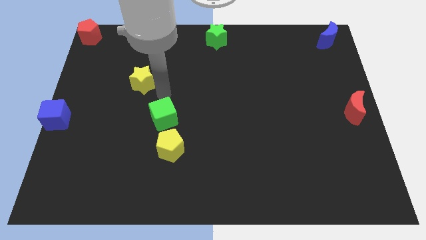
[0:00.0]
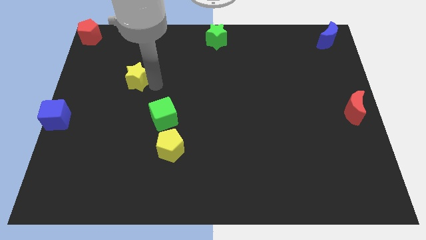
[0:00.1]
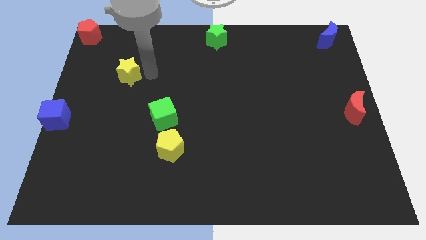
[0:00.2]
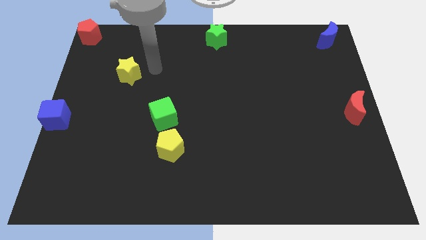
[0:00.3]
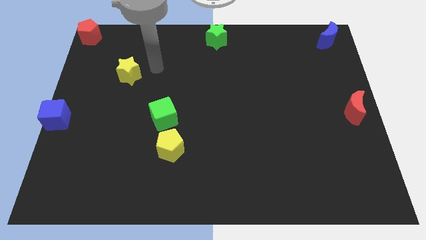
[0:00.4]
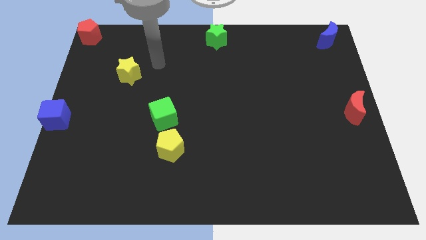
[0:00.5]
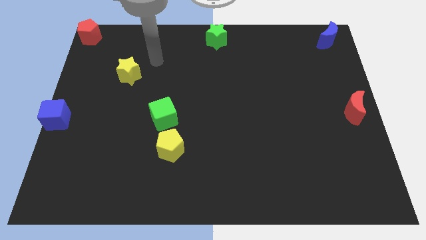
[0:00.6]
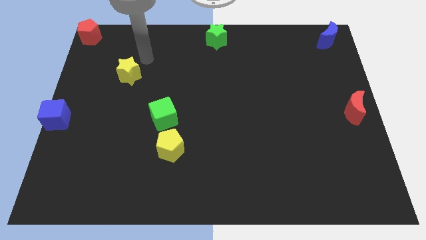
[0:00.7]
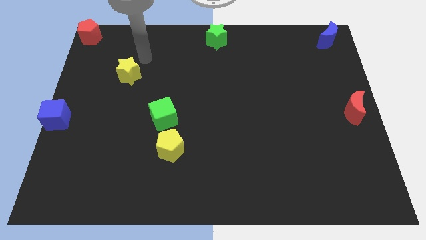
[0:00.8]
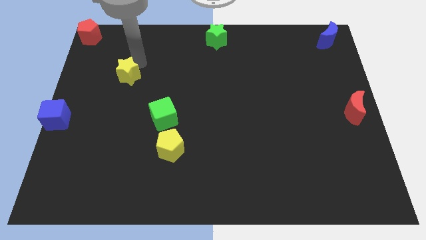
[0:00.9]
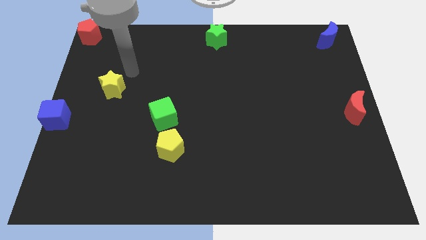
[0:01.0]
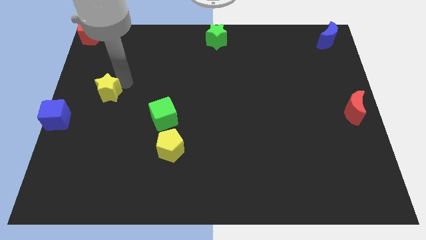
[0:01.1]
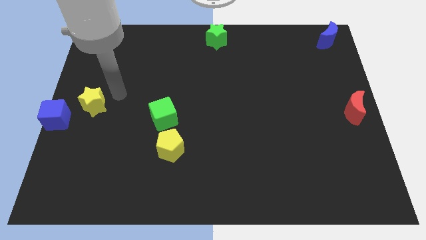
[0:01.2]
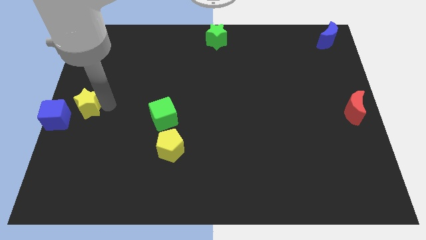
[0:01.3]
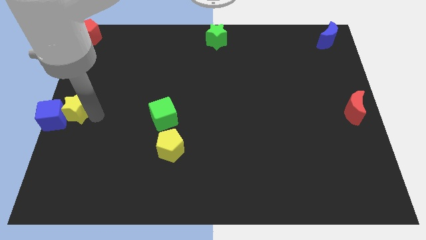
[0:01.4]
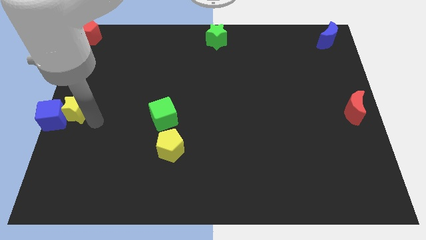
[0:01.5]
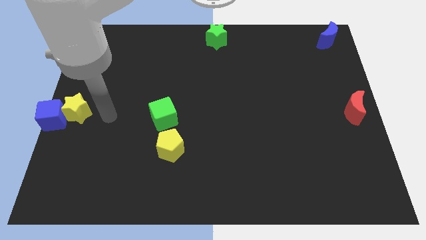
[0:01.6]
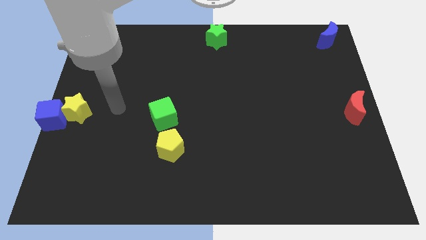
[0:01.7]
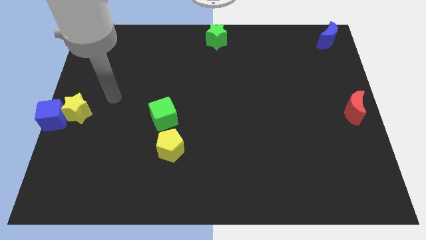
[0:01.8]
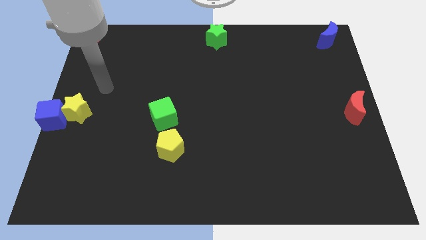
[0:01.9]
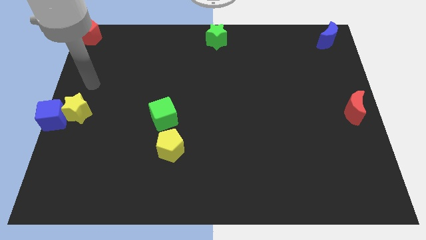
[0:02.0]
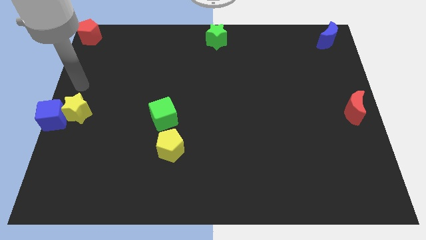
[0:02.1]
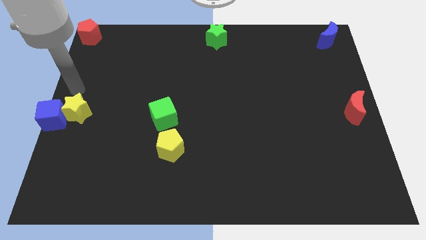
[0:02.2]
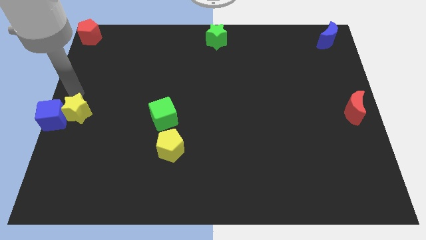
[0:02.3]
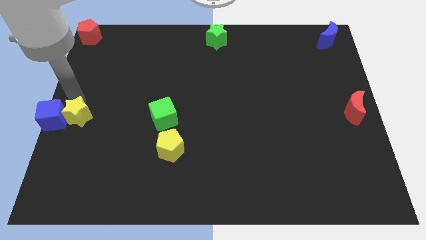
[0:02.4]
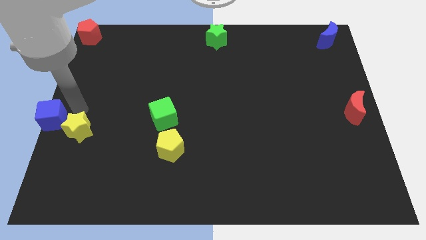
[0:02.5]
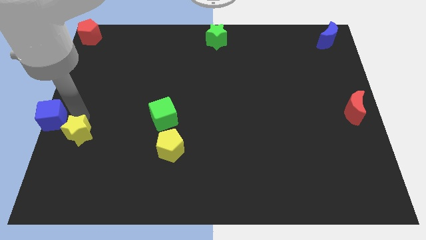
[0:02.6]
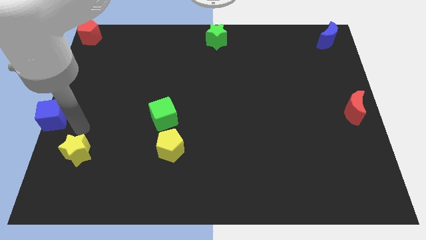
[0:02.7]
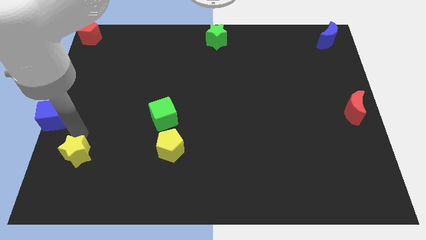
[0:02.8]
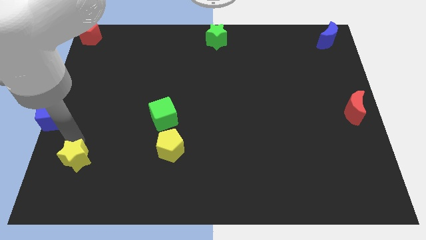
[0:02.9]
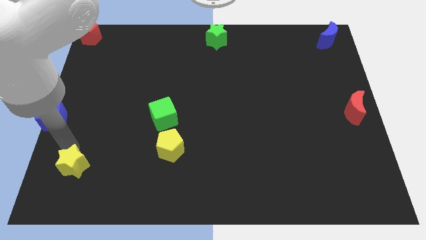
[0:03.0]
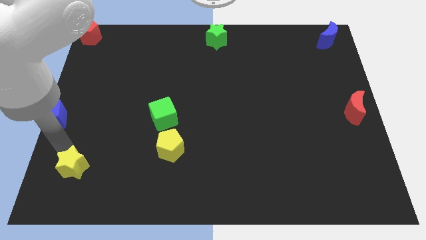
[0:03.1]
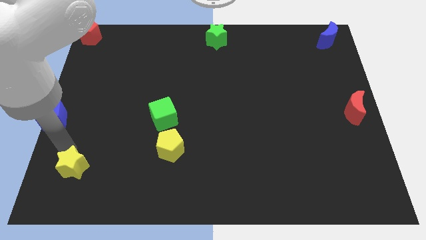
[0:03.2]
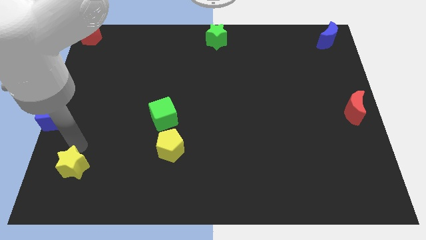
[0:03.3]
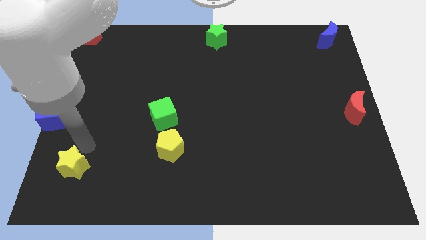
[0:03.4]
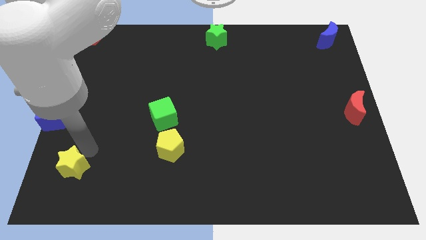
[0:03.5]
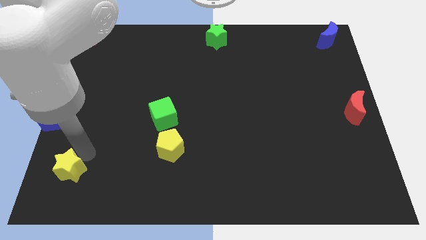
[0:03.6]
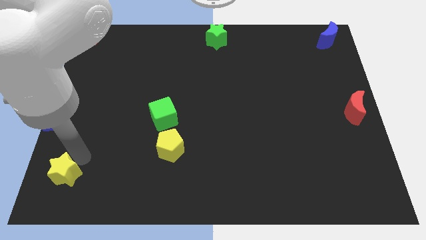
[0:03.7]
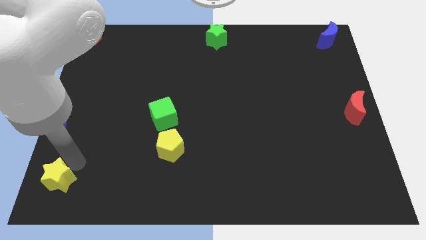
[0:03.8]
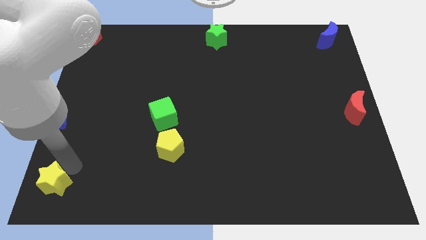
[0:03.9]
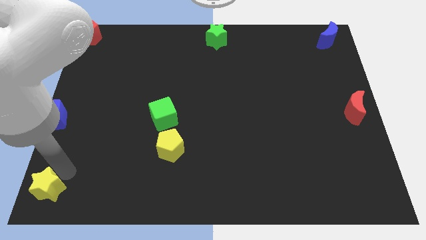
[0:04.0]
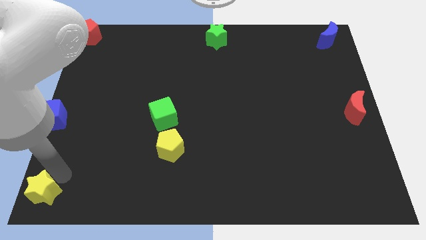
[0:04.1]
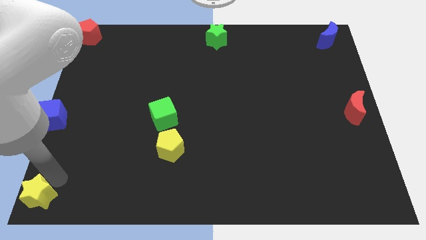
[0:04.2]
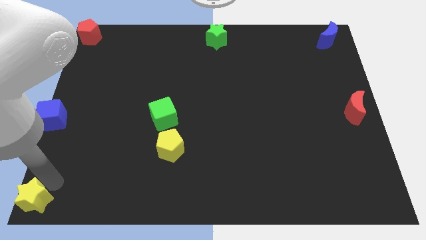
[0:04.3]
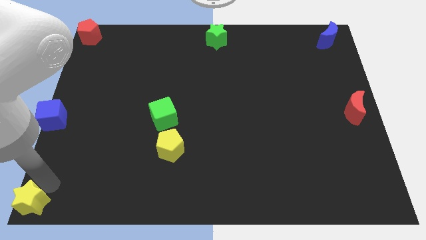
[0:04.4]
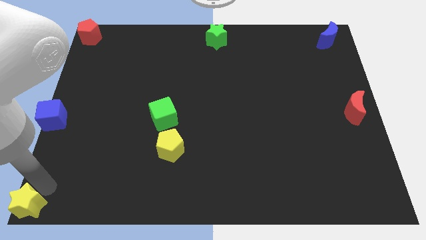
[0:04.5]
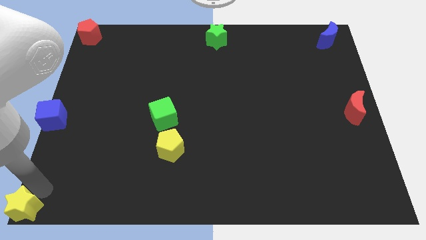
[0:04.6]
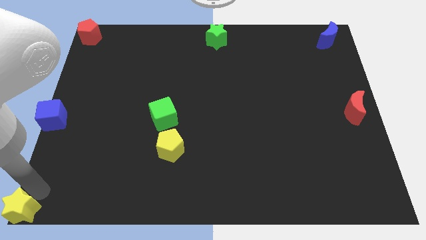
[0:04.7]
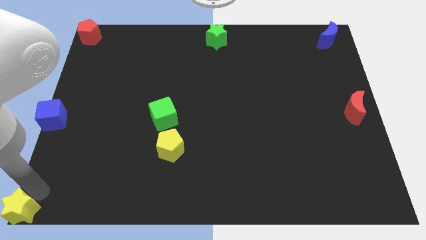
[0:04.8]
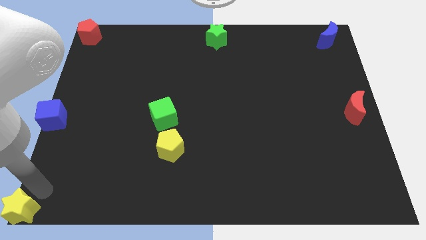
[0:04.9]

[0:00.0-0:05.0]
push the yellow star towards the left bottom of the board

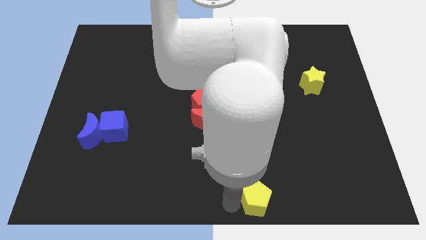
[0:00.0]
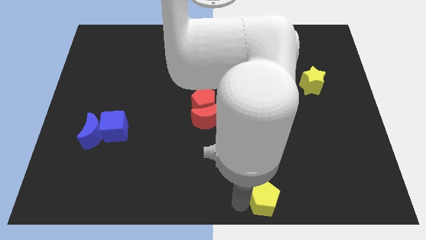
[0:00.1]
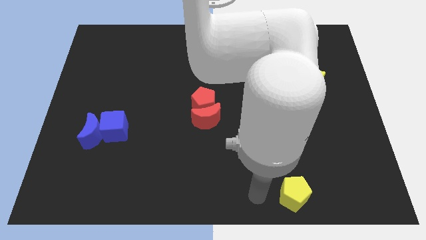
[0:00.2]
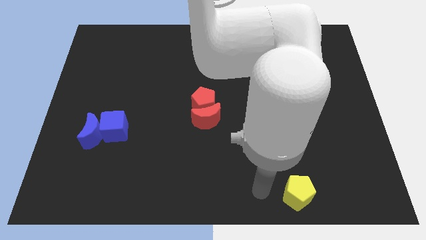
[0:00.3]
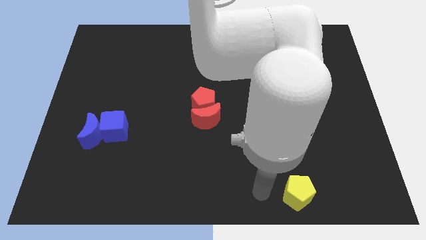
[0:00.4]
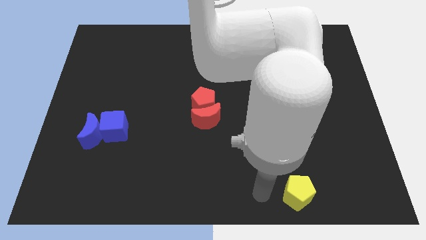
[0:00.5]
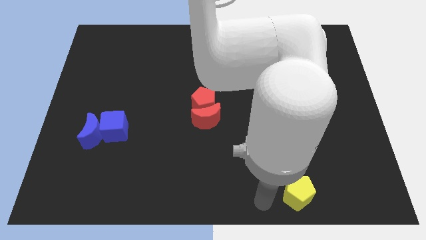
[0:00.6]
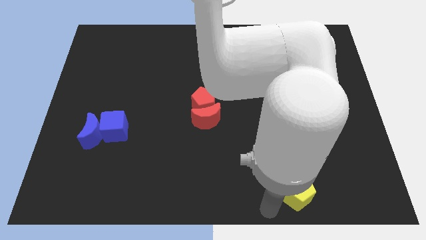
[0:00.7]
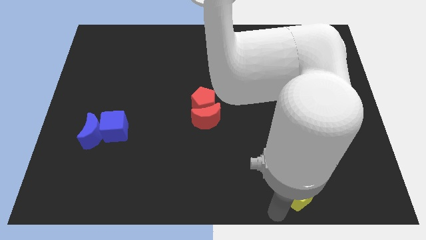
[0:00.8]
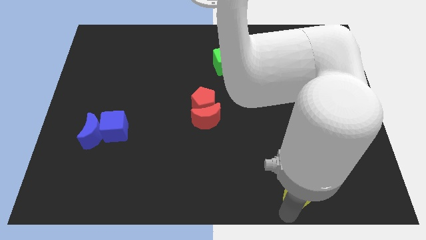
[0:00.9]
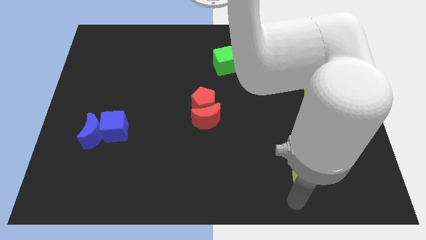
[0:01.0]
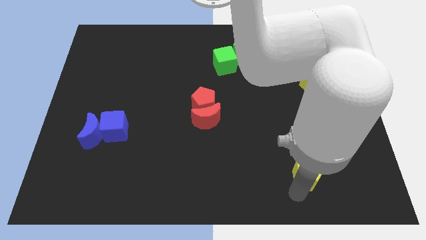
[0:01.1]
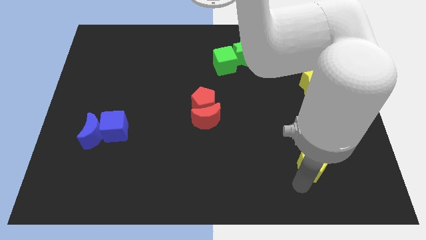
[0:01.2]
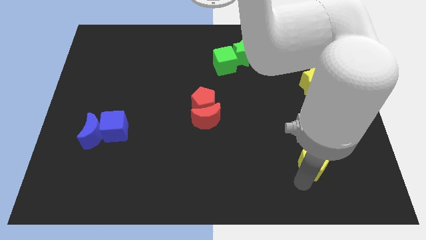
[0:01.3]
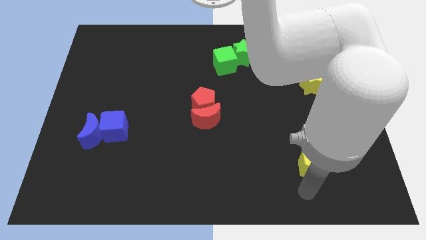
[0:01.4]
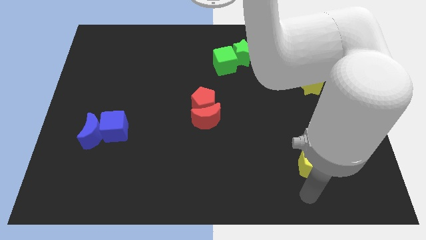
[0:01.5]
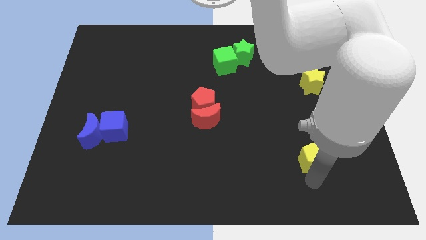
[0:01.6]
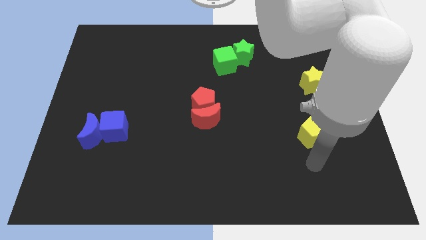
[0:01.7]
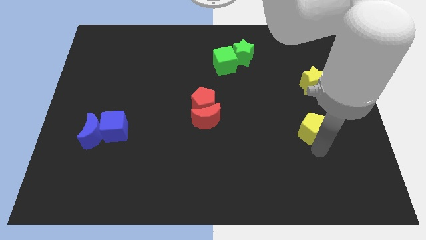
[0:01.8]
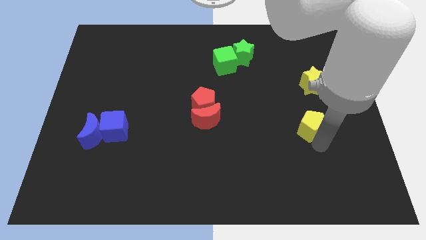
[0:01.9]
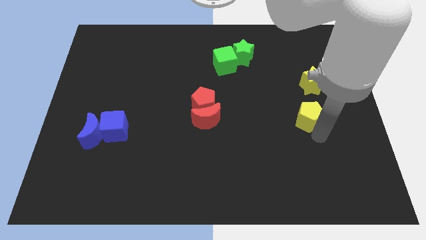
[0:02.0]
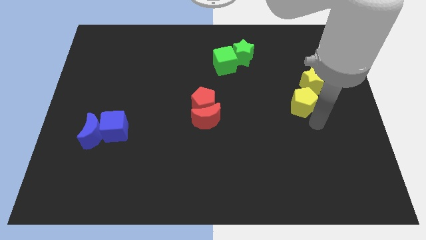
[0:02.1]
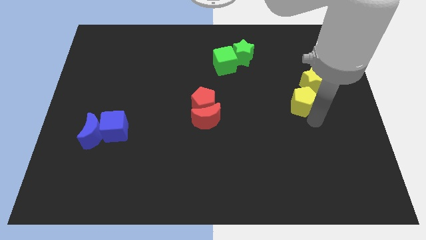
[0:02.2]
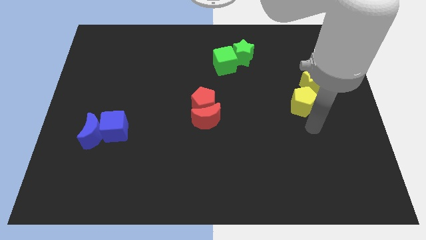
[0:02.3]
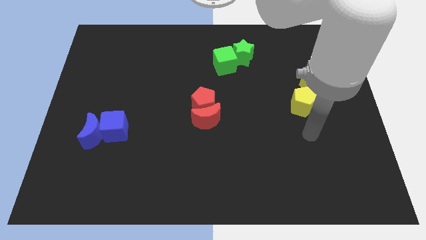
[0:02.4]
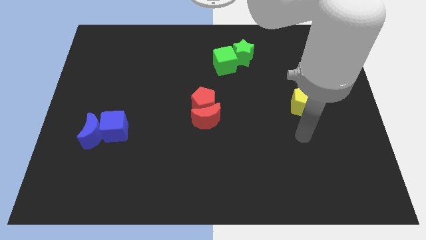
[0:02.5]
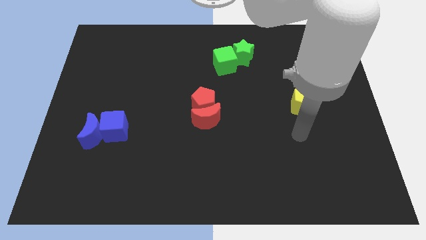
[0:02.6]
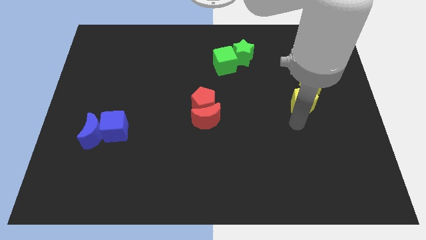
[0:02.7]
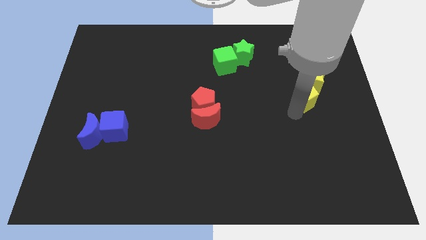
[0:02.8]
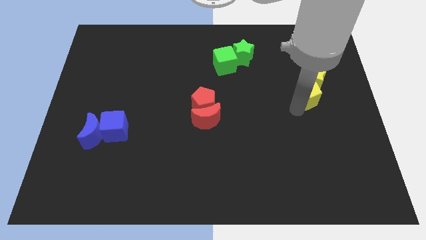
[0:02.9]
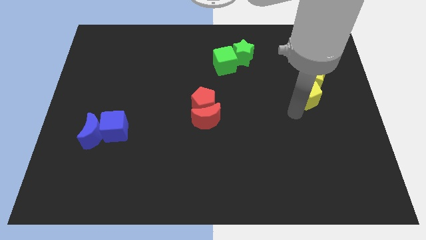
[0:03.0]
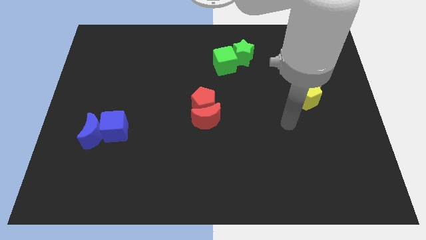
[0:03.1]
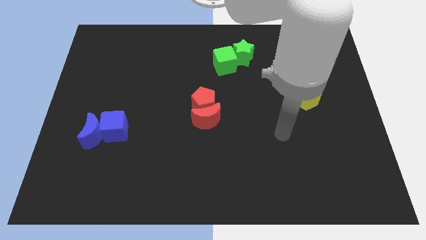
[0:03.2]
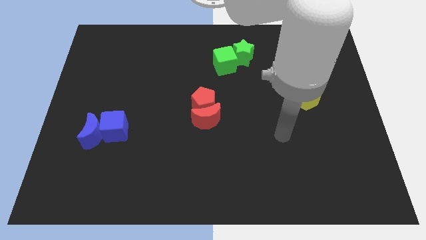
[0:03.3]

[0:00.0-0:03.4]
push the yellow pentagon into the yellow star

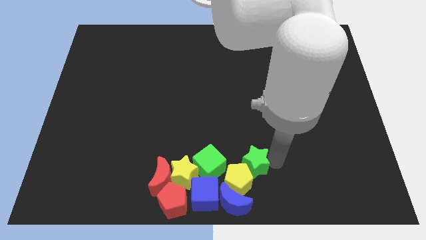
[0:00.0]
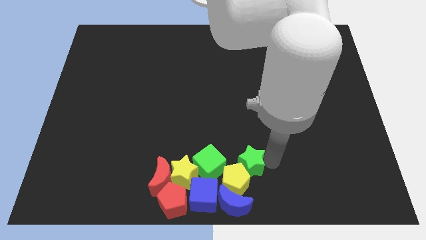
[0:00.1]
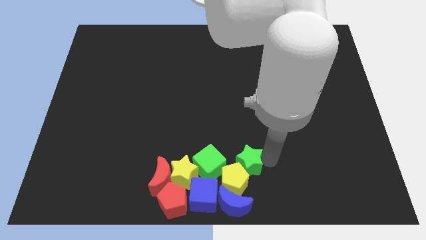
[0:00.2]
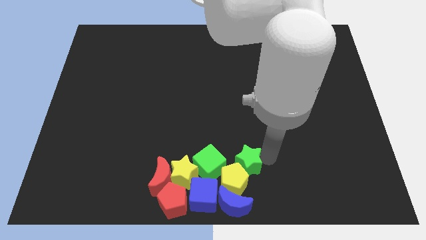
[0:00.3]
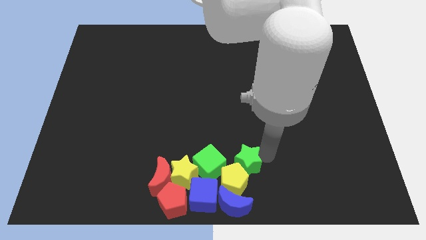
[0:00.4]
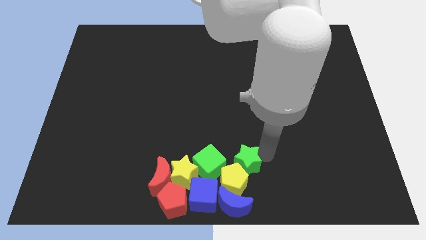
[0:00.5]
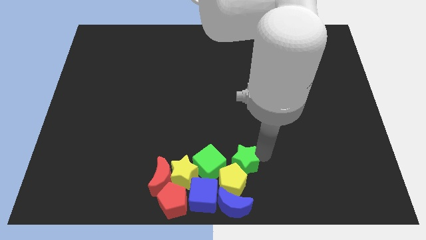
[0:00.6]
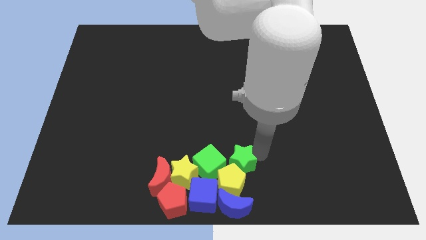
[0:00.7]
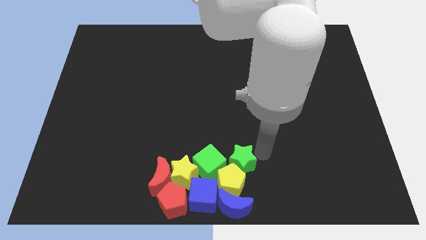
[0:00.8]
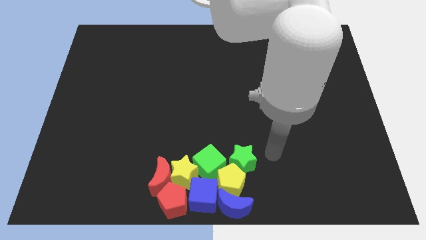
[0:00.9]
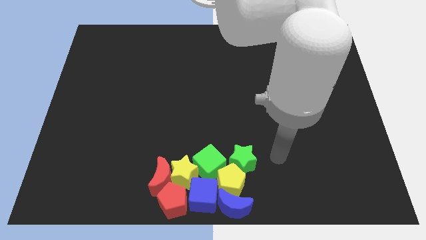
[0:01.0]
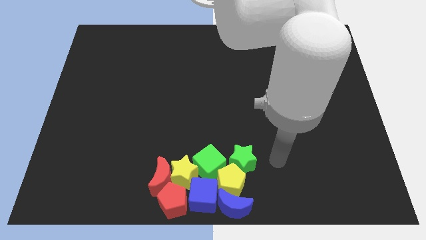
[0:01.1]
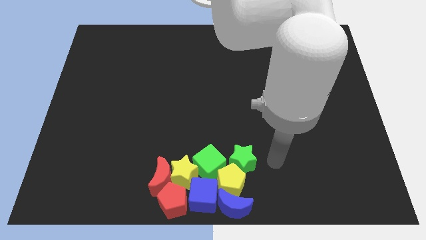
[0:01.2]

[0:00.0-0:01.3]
push the green star into the yellow pentagon
